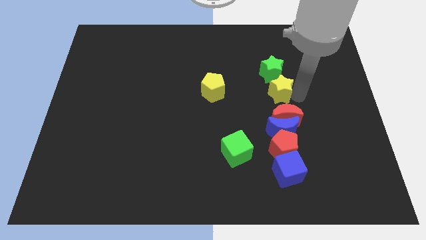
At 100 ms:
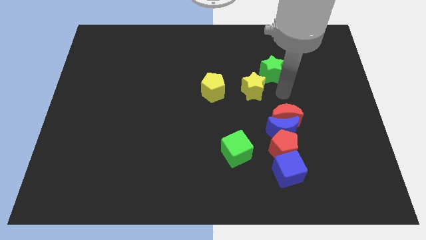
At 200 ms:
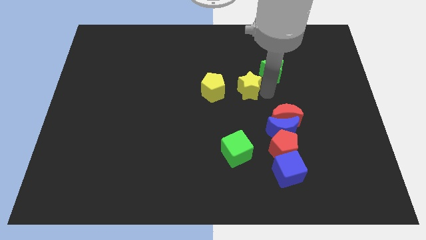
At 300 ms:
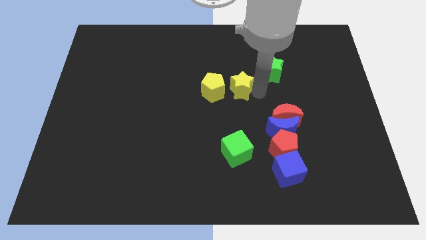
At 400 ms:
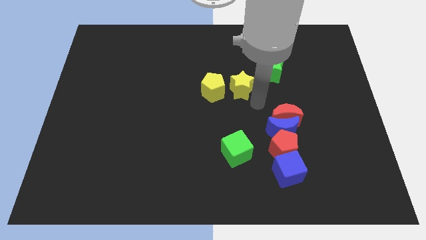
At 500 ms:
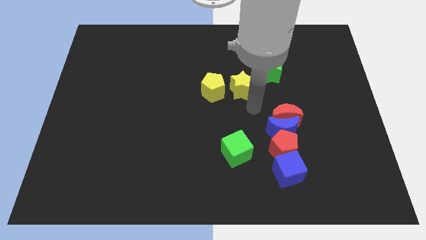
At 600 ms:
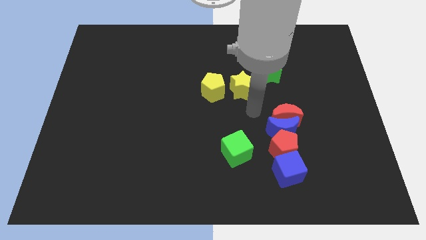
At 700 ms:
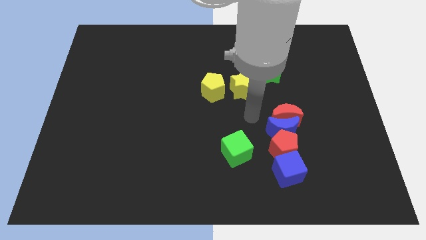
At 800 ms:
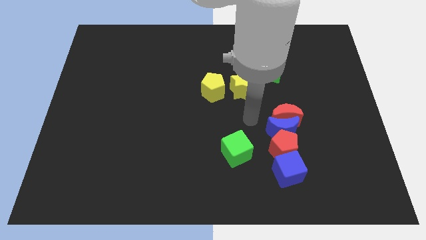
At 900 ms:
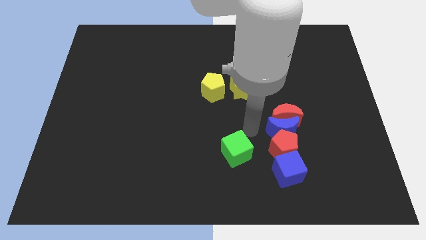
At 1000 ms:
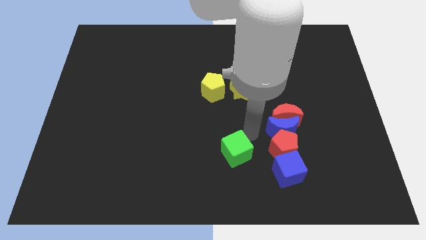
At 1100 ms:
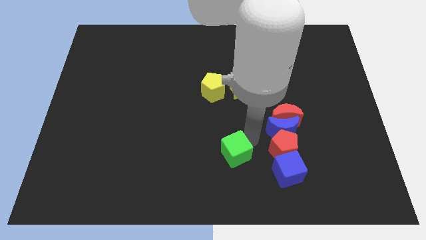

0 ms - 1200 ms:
push the yellow star to the right of the yellow pentagon

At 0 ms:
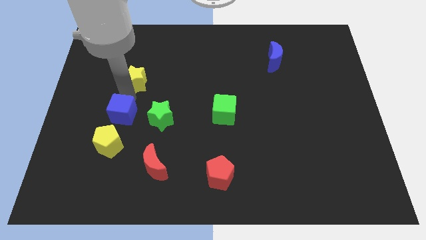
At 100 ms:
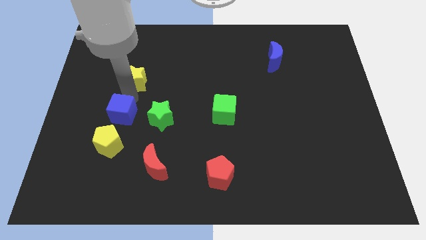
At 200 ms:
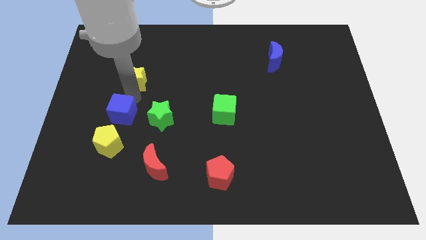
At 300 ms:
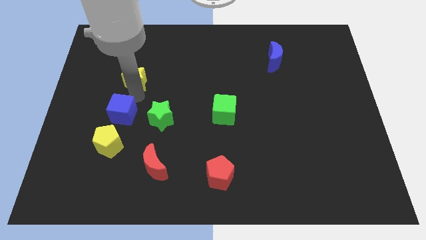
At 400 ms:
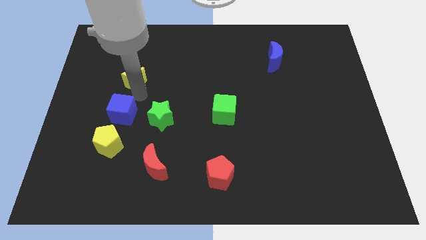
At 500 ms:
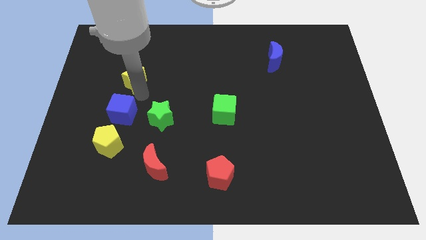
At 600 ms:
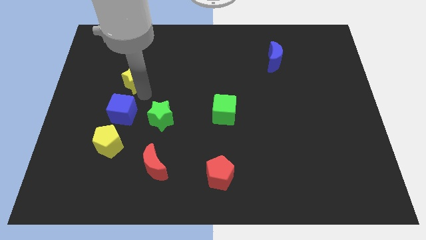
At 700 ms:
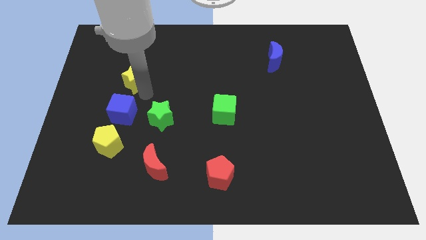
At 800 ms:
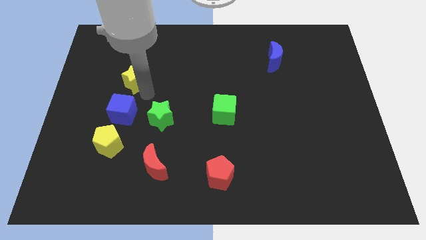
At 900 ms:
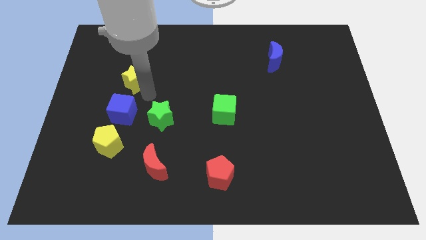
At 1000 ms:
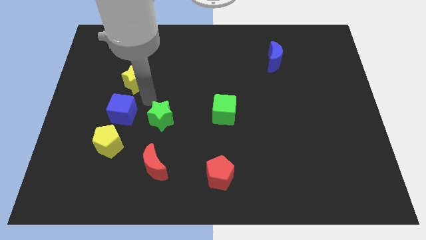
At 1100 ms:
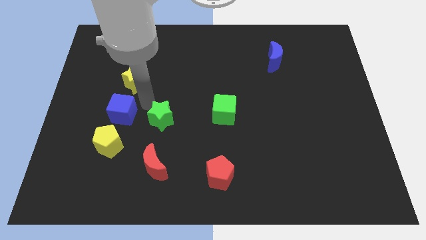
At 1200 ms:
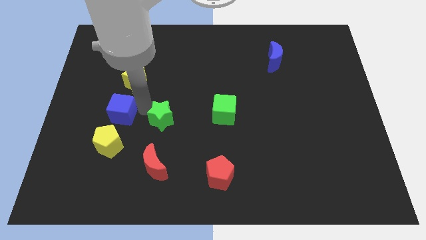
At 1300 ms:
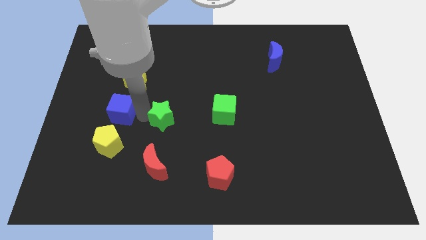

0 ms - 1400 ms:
place your arm in between green star and blue cube

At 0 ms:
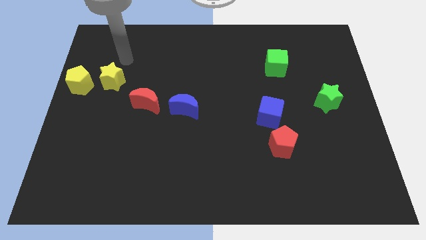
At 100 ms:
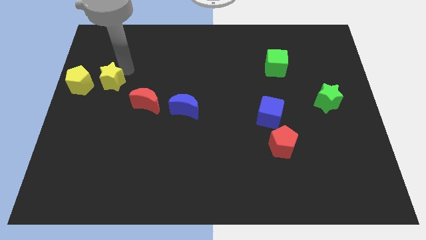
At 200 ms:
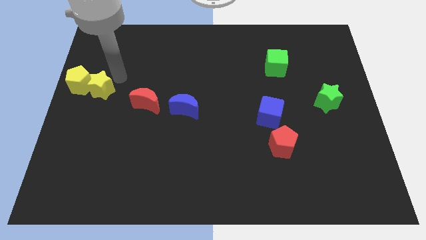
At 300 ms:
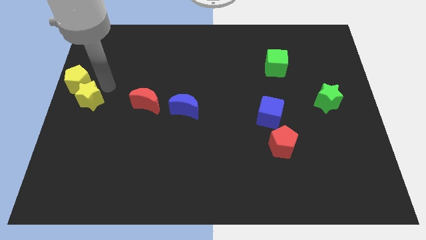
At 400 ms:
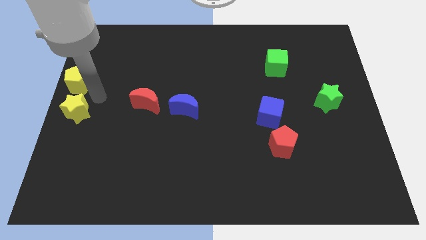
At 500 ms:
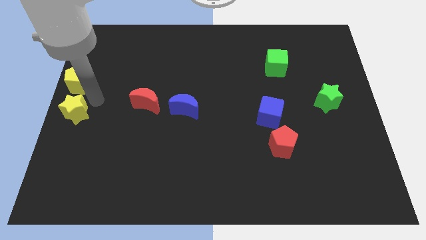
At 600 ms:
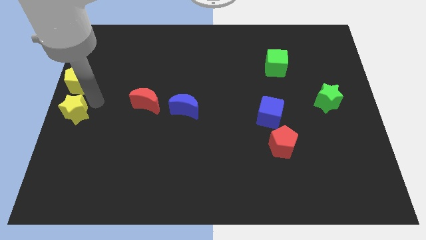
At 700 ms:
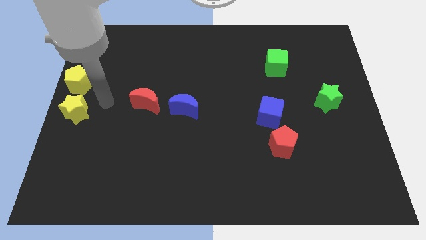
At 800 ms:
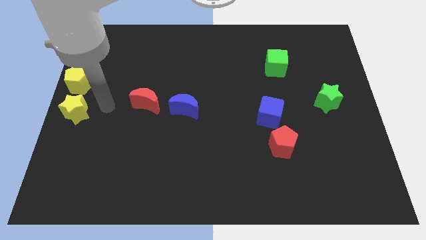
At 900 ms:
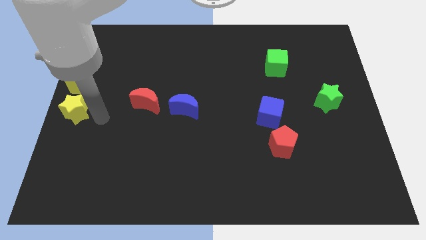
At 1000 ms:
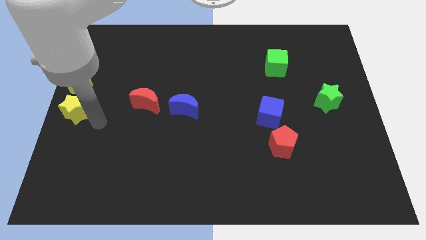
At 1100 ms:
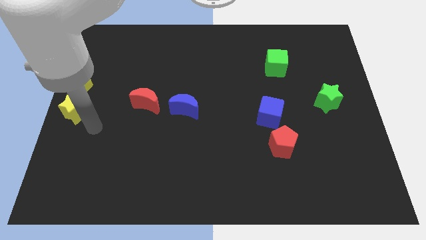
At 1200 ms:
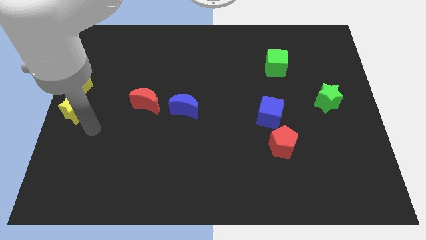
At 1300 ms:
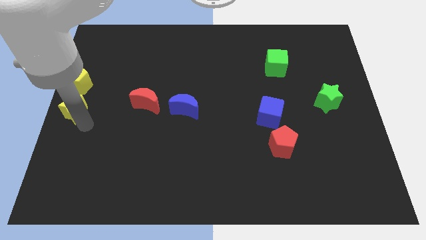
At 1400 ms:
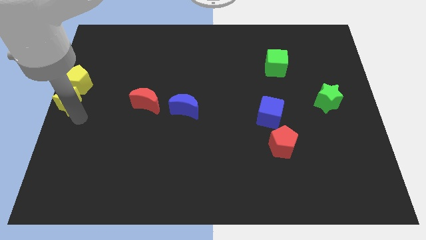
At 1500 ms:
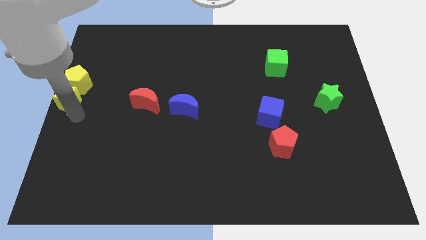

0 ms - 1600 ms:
place the yellow star below the yellow pentagon

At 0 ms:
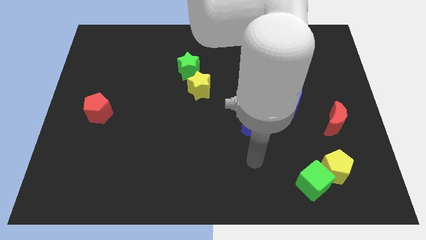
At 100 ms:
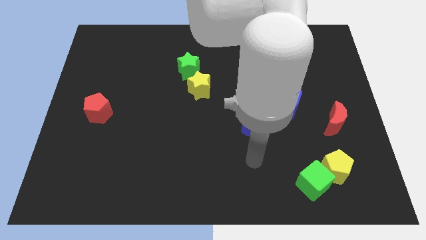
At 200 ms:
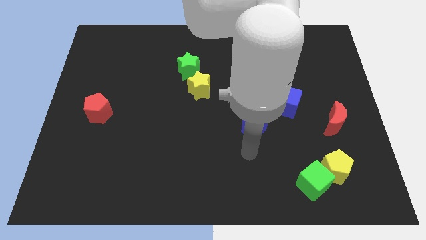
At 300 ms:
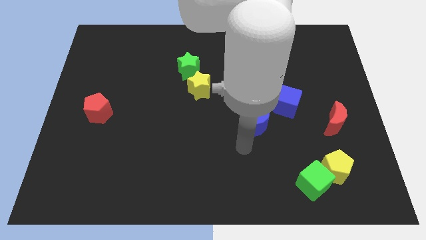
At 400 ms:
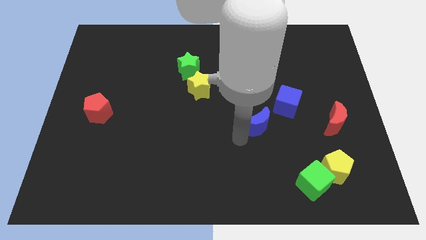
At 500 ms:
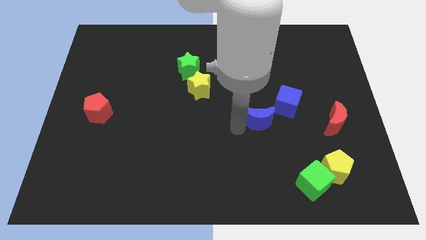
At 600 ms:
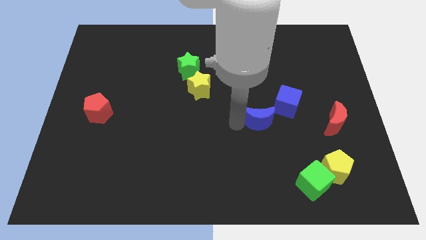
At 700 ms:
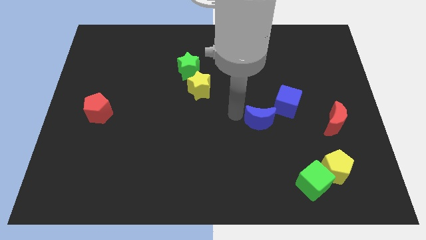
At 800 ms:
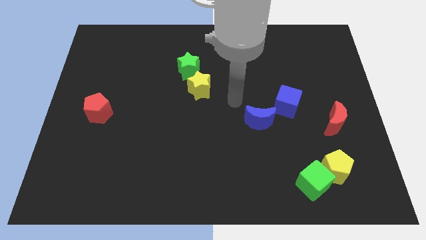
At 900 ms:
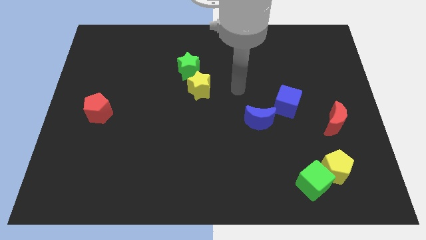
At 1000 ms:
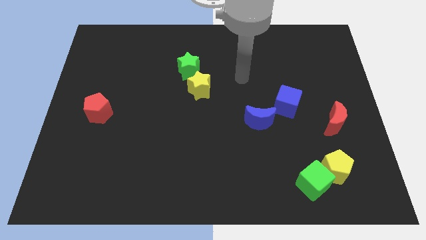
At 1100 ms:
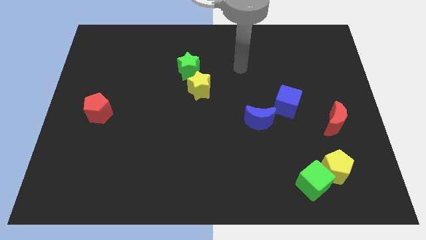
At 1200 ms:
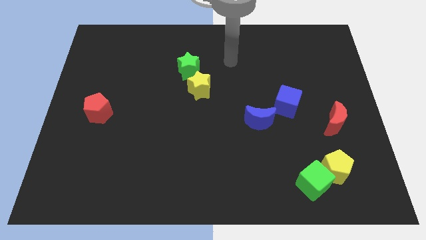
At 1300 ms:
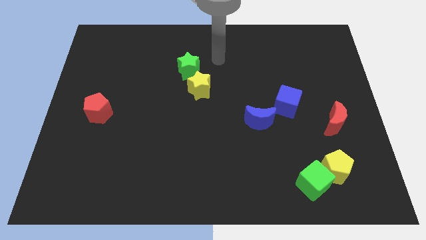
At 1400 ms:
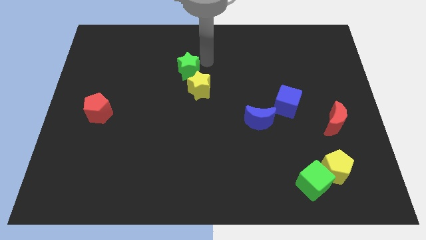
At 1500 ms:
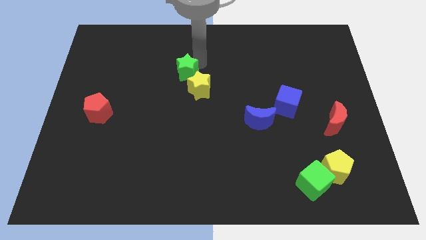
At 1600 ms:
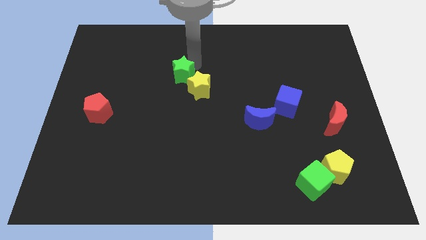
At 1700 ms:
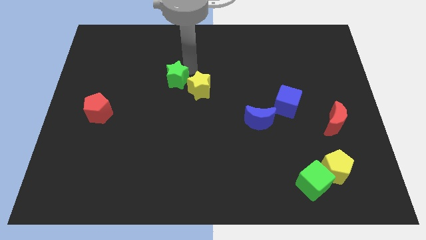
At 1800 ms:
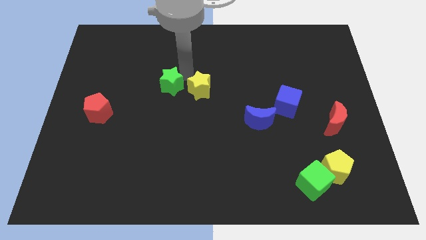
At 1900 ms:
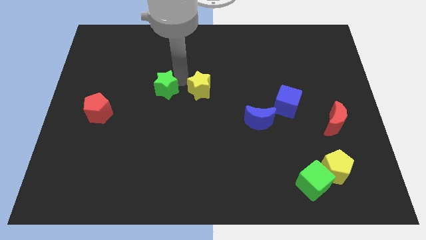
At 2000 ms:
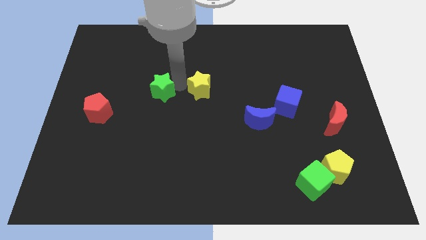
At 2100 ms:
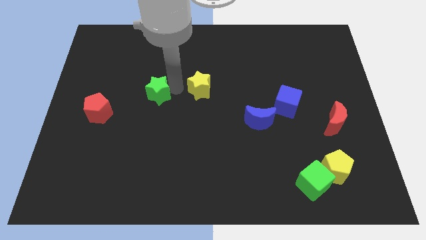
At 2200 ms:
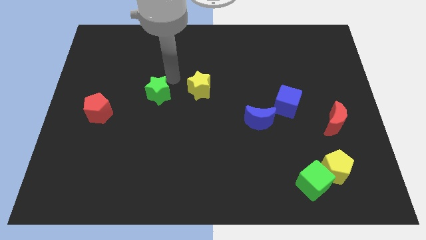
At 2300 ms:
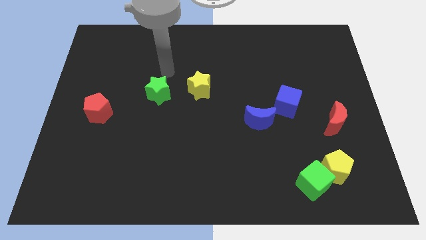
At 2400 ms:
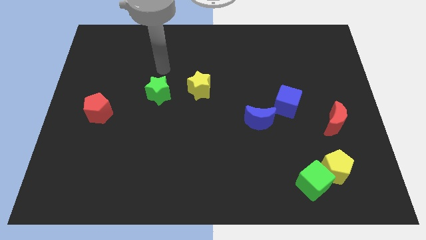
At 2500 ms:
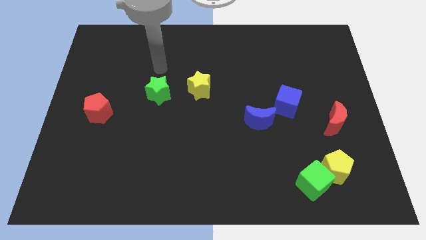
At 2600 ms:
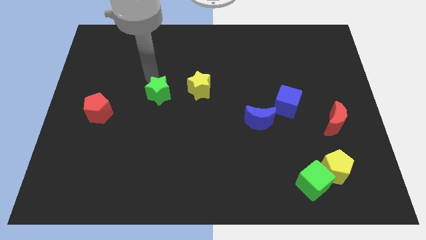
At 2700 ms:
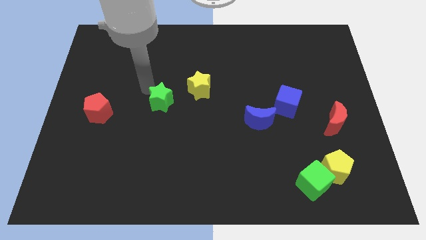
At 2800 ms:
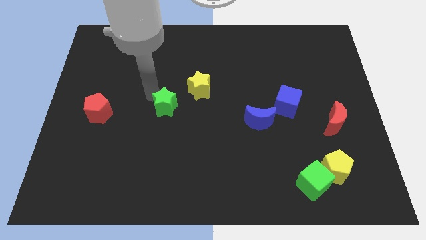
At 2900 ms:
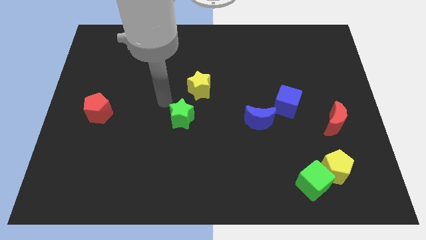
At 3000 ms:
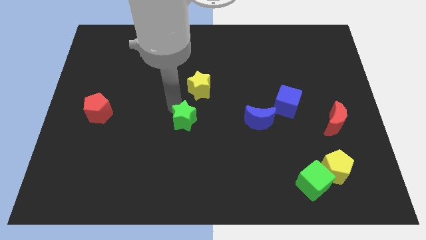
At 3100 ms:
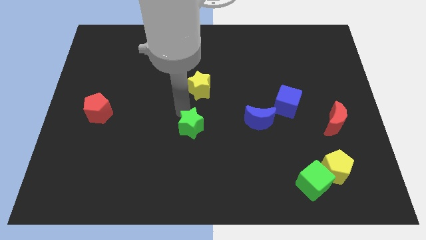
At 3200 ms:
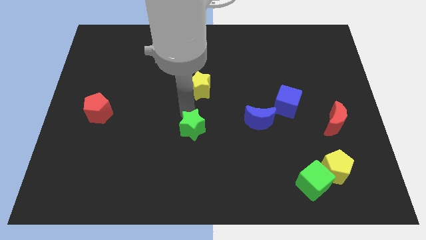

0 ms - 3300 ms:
push the green star to the bottom side of the yellow star

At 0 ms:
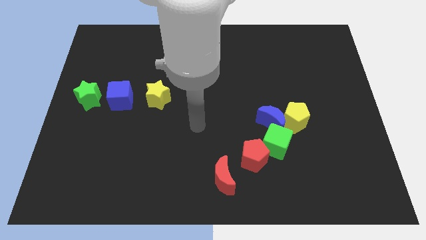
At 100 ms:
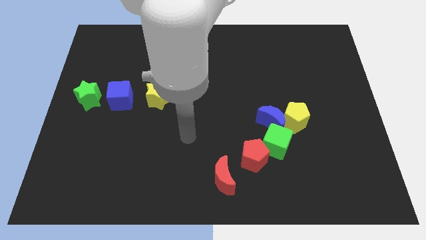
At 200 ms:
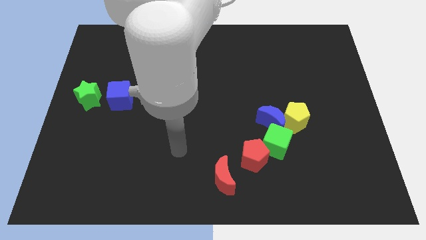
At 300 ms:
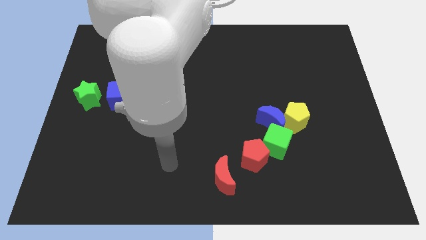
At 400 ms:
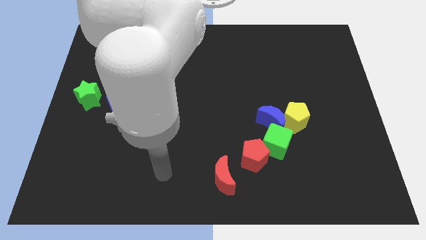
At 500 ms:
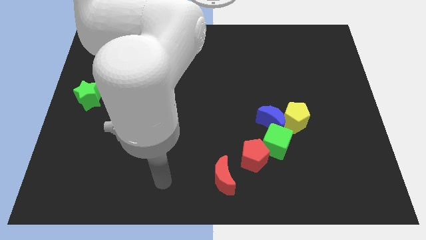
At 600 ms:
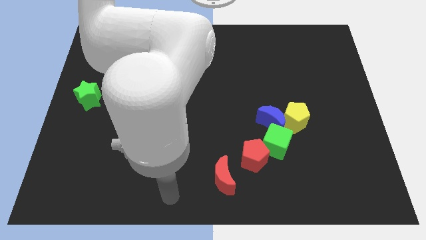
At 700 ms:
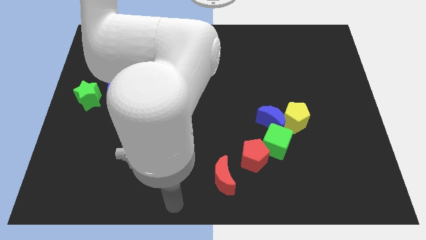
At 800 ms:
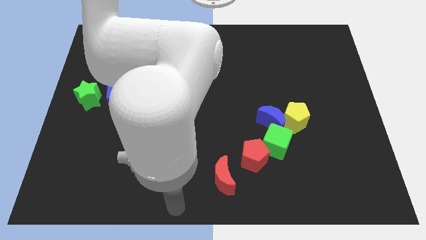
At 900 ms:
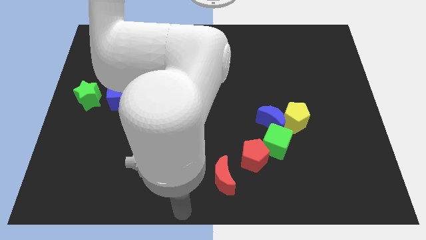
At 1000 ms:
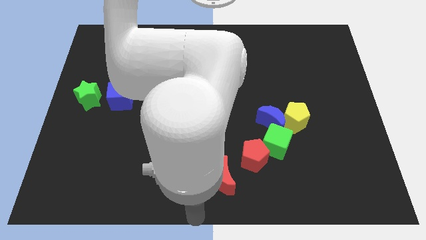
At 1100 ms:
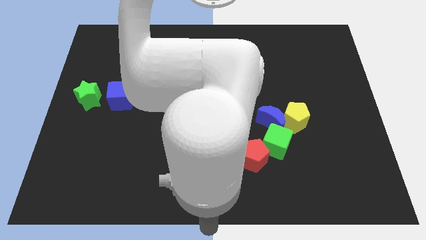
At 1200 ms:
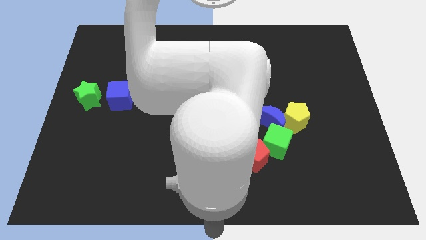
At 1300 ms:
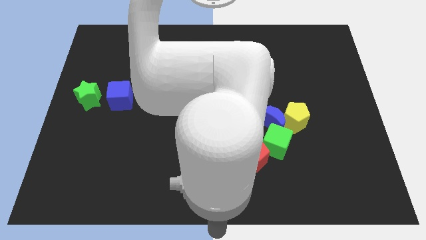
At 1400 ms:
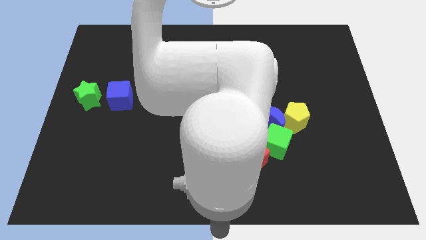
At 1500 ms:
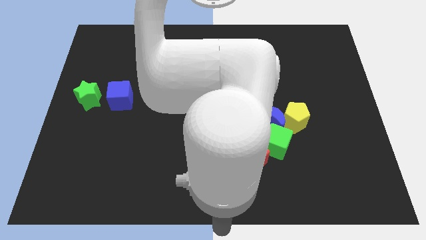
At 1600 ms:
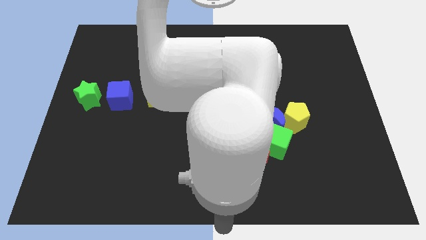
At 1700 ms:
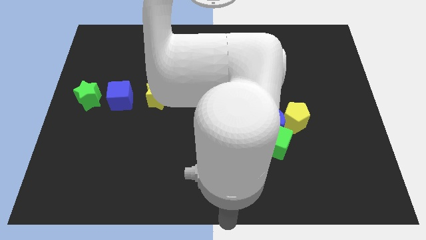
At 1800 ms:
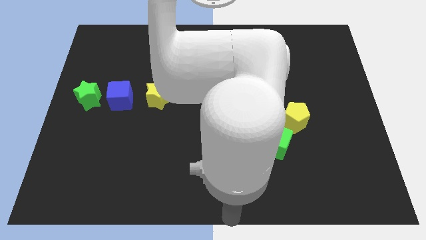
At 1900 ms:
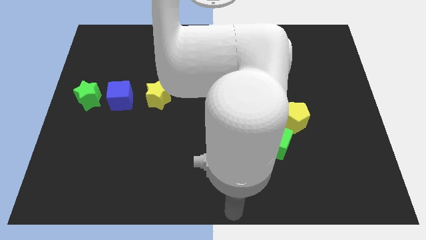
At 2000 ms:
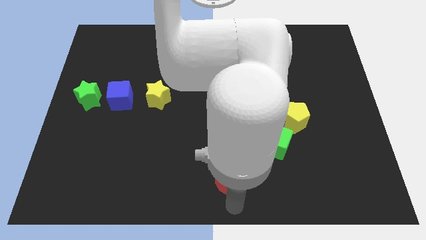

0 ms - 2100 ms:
move the arm to the bottom of the red crescent
